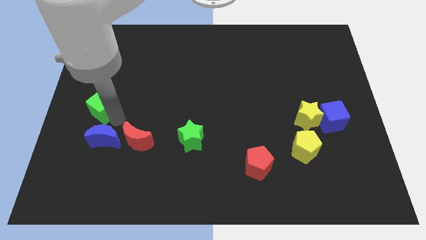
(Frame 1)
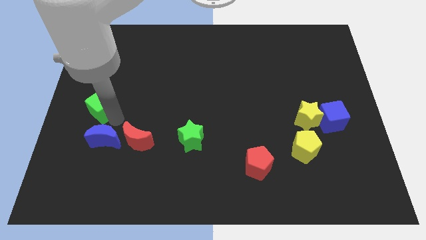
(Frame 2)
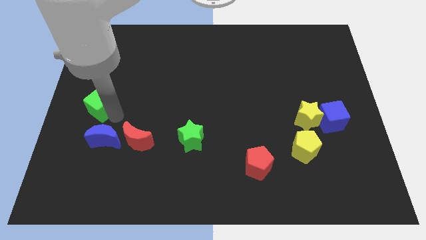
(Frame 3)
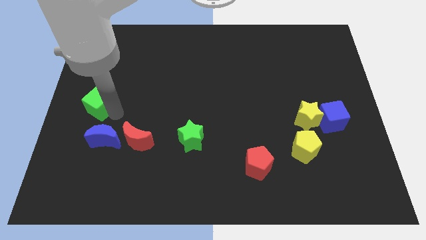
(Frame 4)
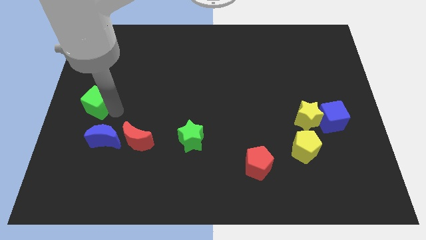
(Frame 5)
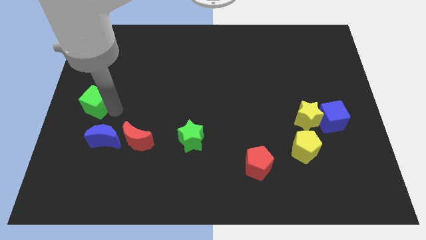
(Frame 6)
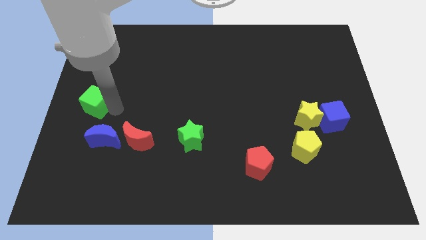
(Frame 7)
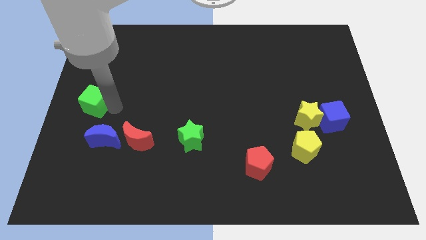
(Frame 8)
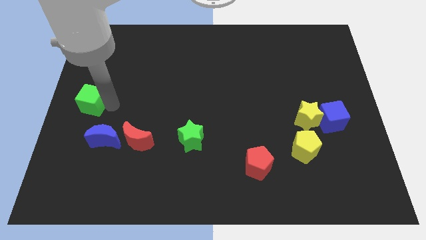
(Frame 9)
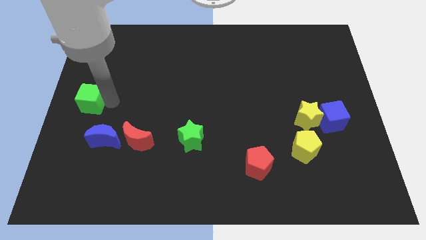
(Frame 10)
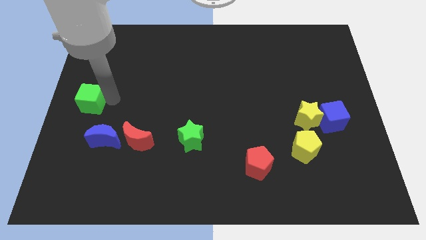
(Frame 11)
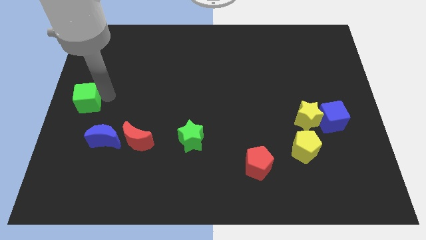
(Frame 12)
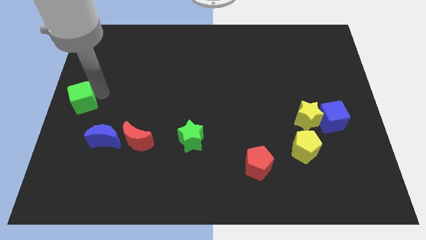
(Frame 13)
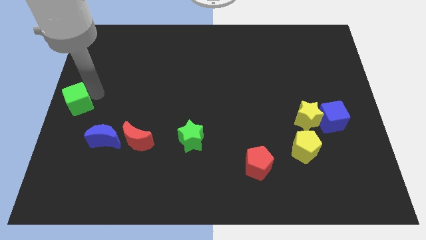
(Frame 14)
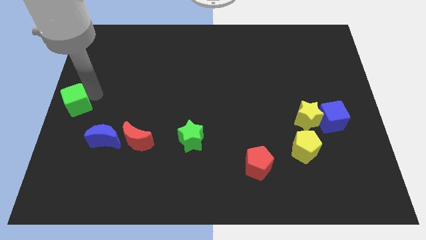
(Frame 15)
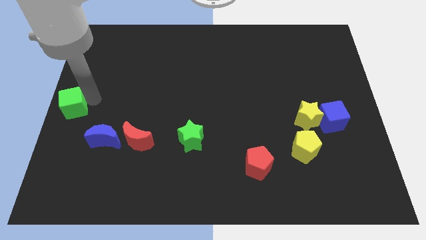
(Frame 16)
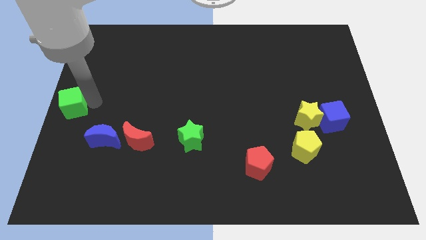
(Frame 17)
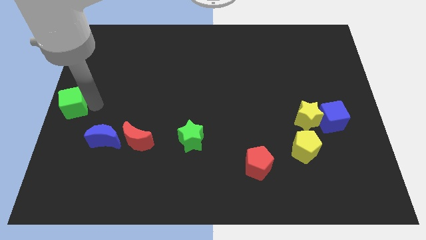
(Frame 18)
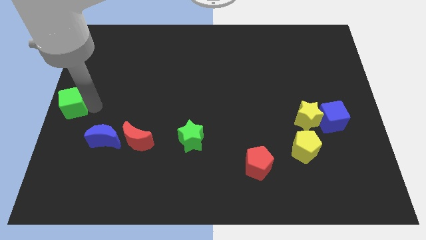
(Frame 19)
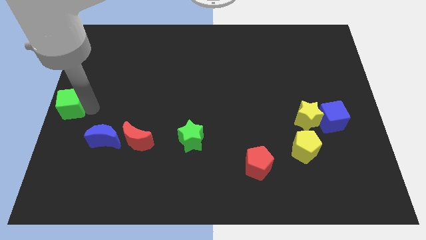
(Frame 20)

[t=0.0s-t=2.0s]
push the green cube to the center left of the board

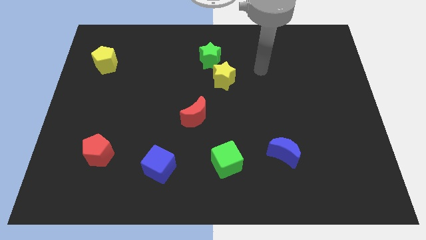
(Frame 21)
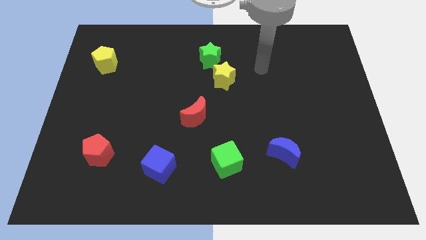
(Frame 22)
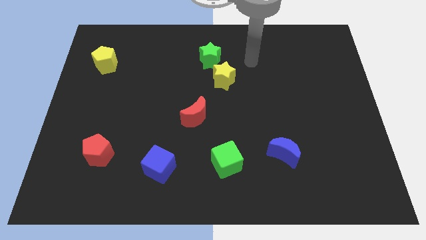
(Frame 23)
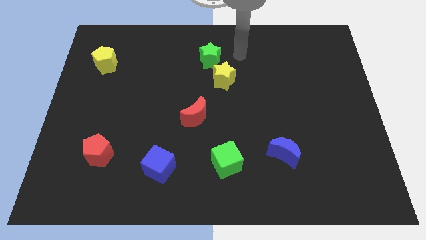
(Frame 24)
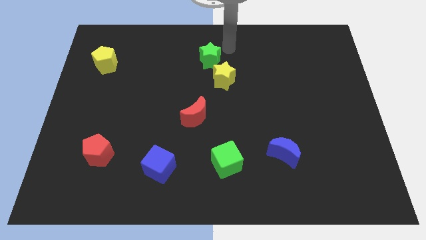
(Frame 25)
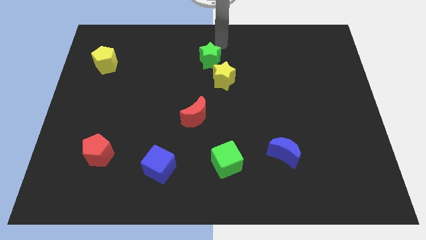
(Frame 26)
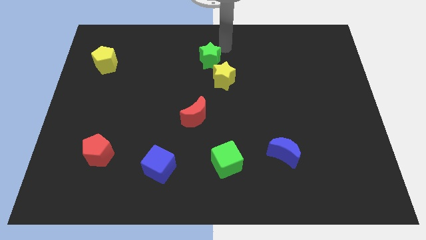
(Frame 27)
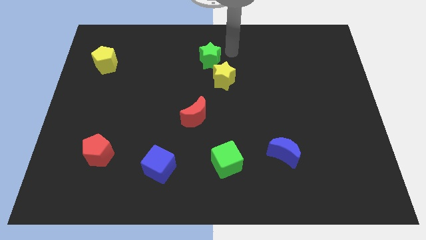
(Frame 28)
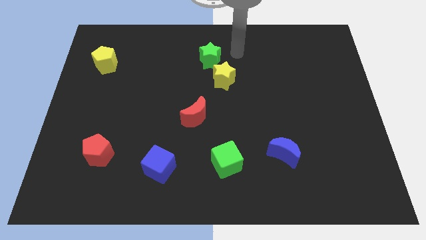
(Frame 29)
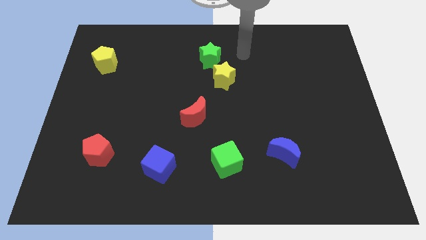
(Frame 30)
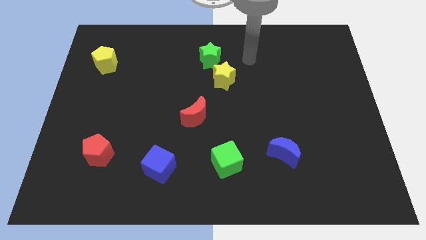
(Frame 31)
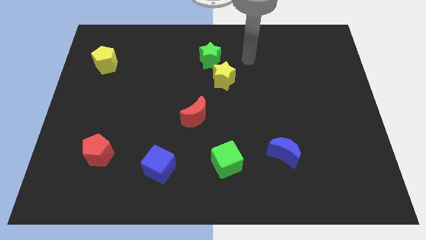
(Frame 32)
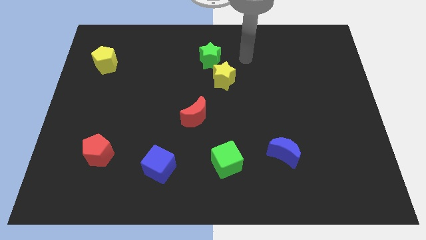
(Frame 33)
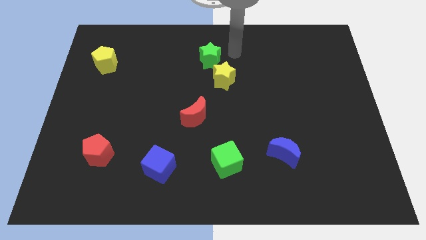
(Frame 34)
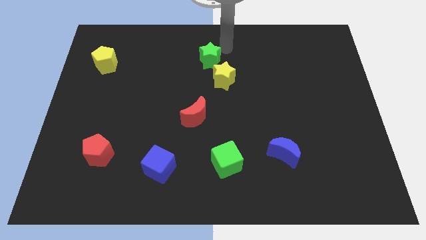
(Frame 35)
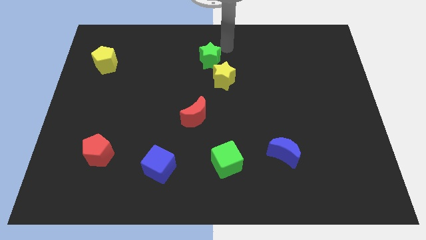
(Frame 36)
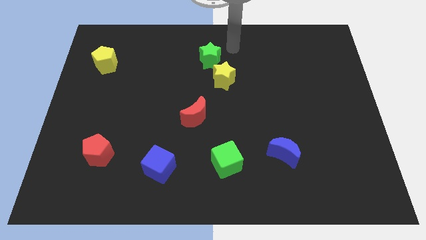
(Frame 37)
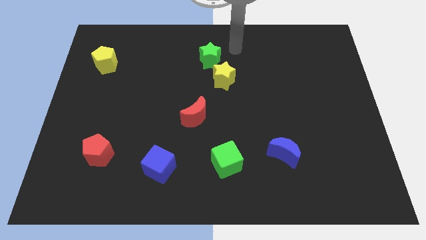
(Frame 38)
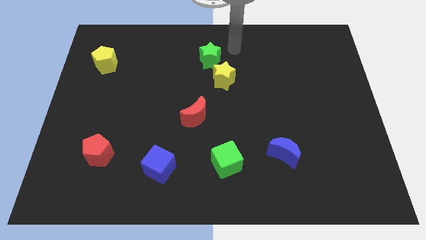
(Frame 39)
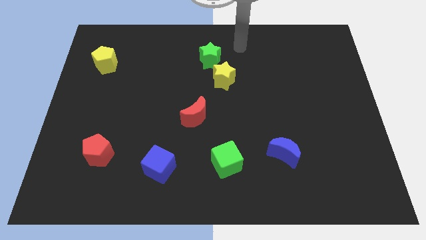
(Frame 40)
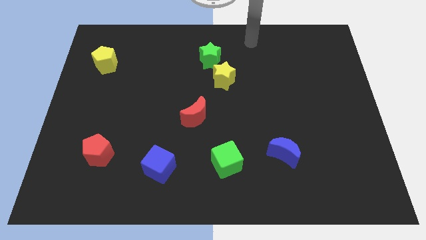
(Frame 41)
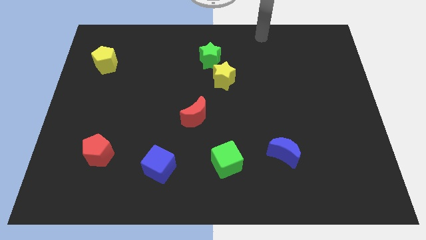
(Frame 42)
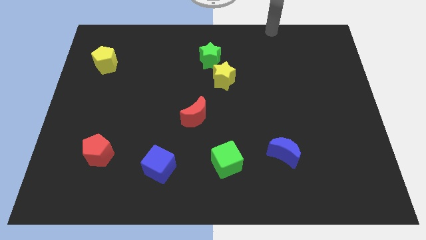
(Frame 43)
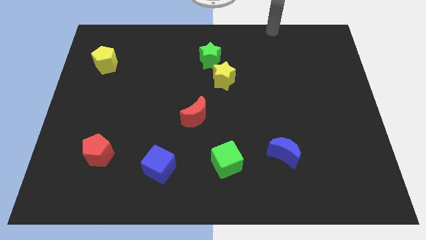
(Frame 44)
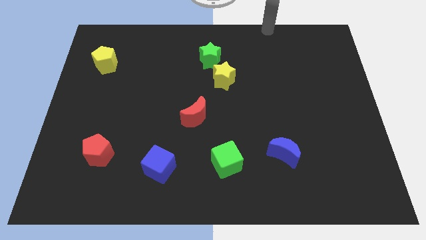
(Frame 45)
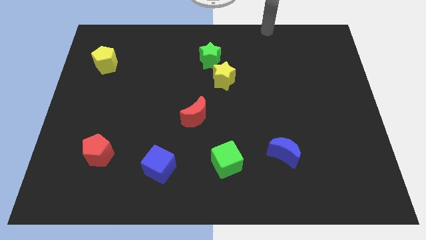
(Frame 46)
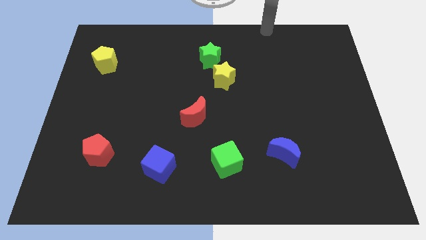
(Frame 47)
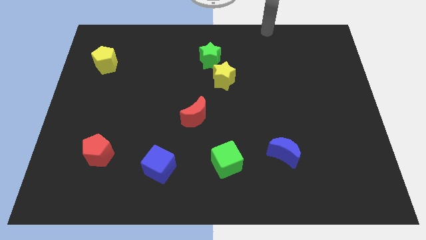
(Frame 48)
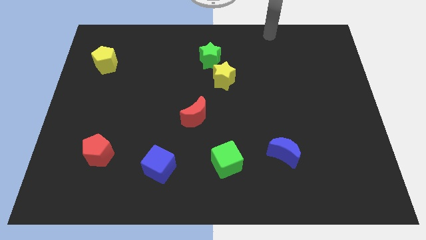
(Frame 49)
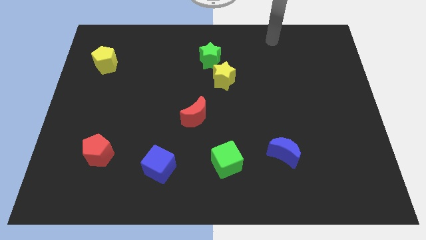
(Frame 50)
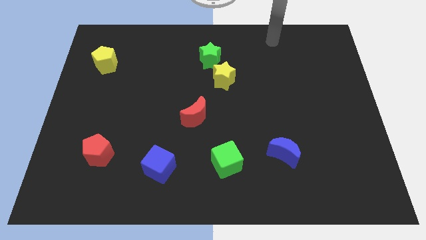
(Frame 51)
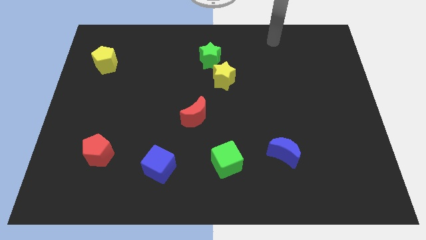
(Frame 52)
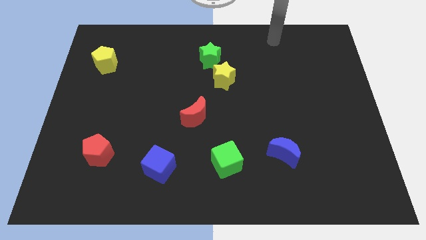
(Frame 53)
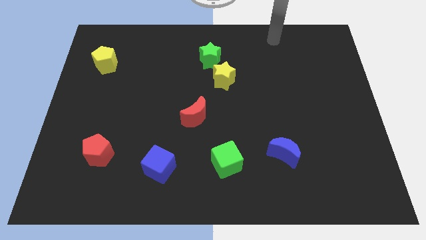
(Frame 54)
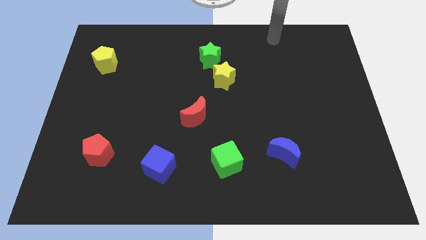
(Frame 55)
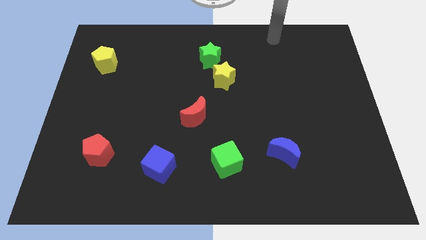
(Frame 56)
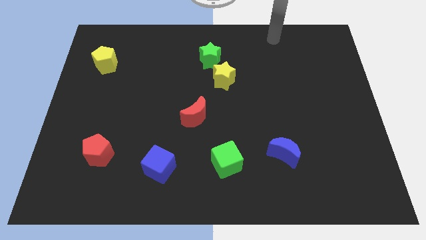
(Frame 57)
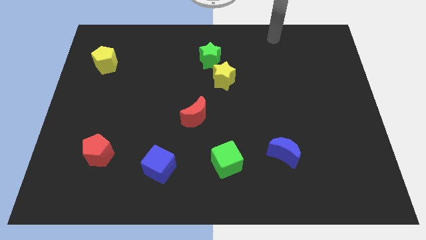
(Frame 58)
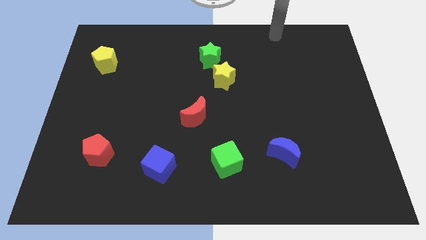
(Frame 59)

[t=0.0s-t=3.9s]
go to the top side of the table

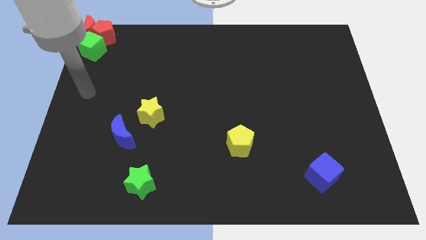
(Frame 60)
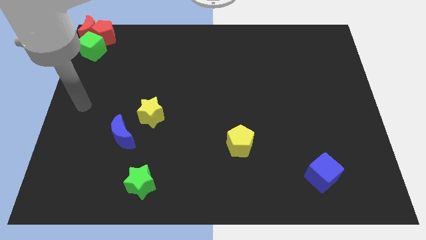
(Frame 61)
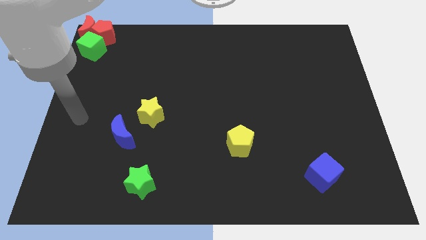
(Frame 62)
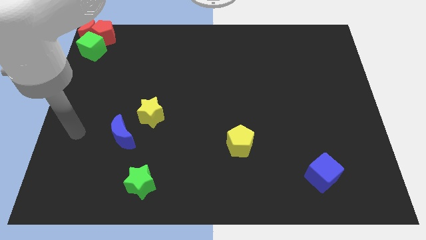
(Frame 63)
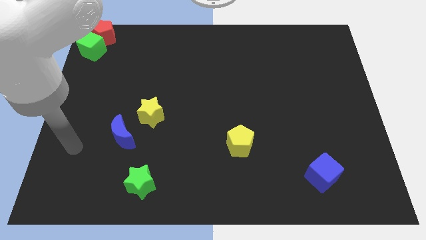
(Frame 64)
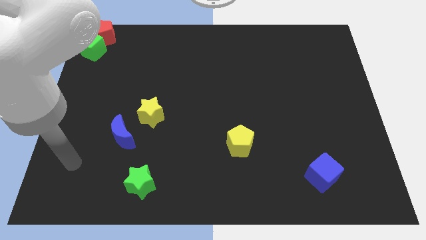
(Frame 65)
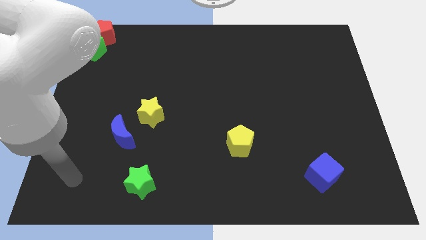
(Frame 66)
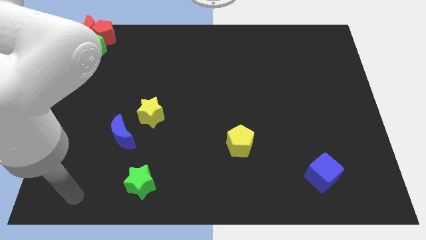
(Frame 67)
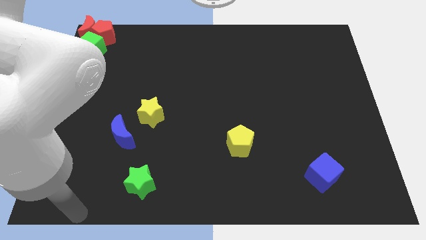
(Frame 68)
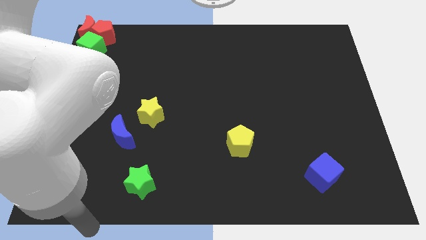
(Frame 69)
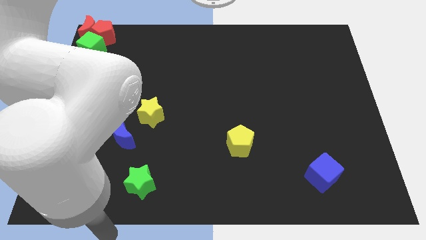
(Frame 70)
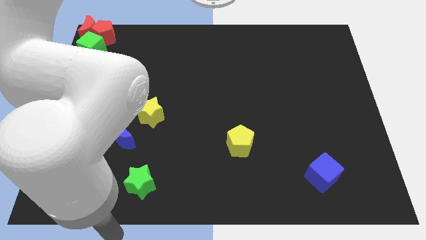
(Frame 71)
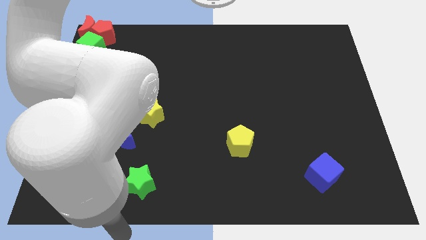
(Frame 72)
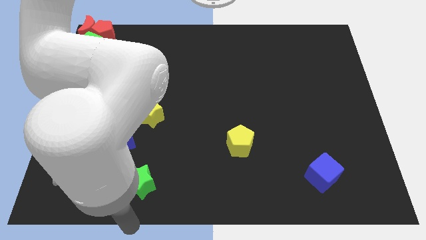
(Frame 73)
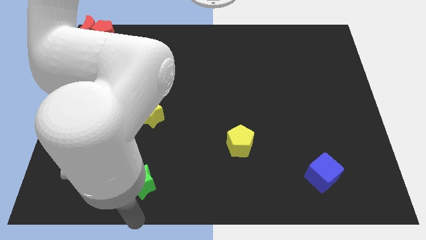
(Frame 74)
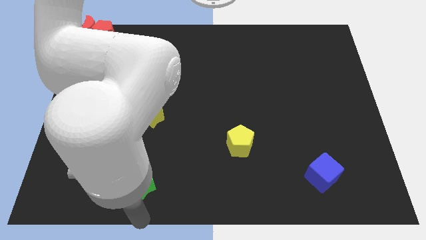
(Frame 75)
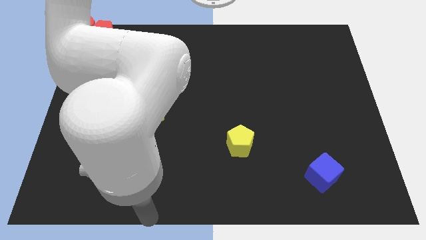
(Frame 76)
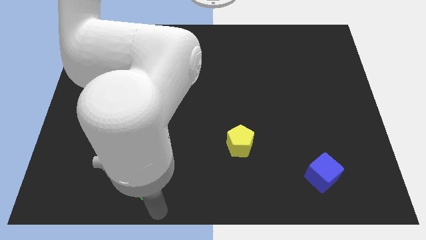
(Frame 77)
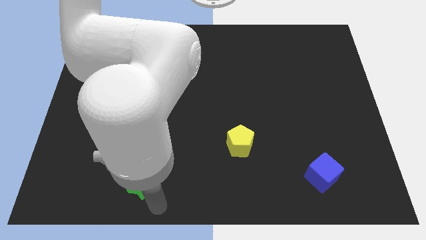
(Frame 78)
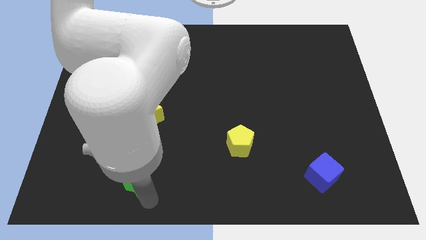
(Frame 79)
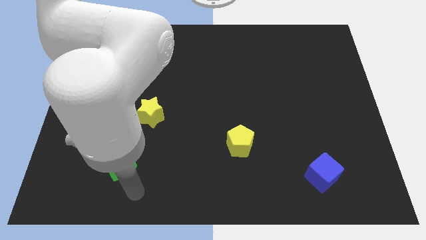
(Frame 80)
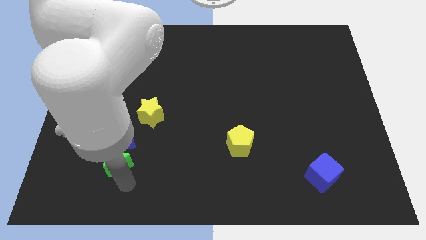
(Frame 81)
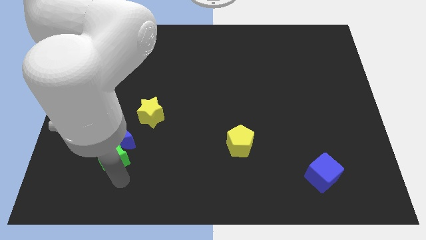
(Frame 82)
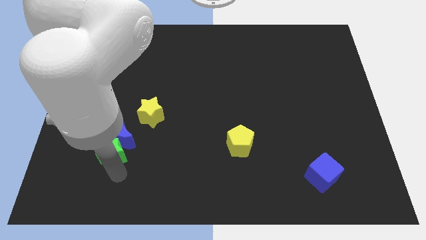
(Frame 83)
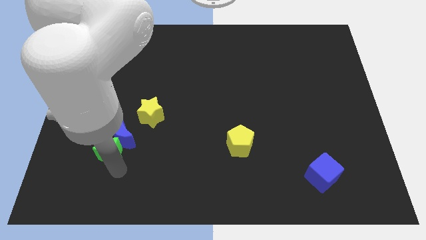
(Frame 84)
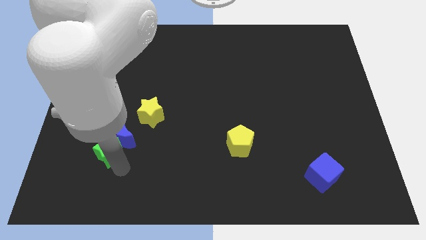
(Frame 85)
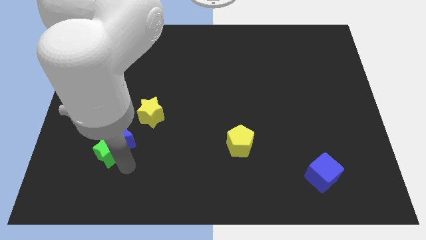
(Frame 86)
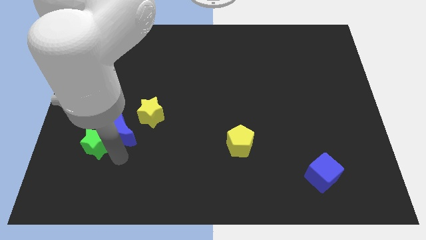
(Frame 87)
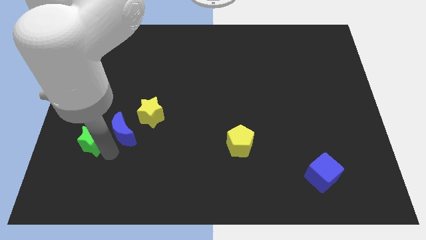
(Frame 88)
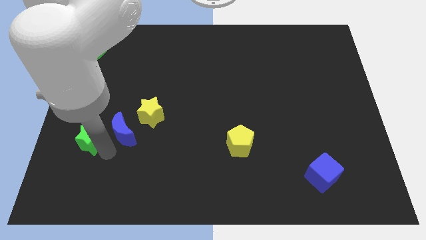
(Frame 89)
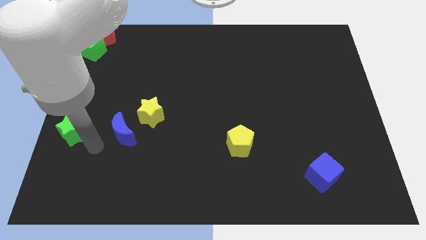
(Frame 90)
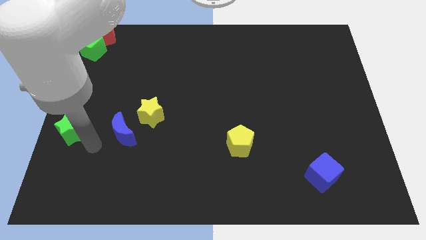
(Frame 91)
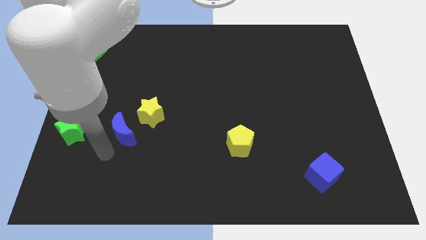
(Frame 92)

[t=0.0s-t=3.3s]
push the green star parallel left to the blue moon
